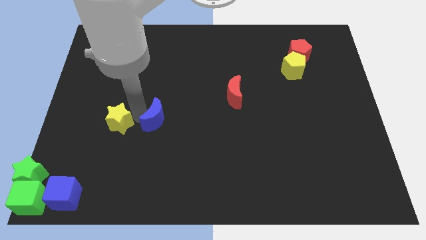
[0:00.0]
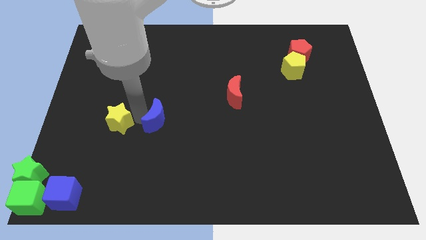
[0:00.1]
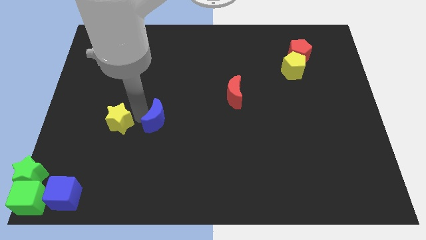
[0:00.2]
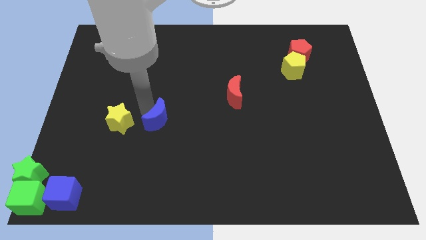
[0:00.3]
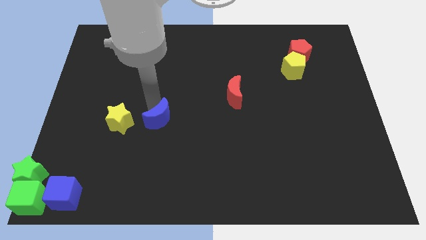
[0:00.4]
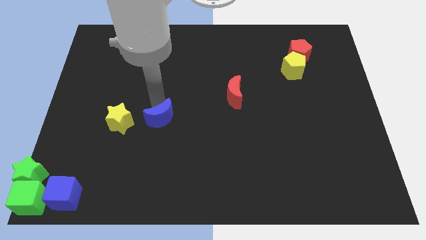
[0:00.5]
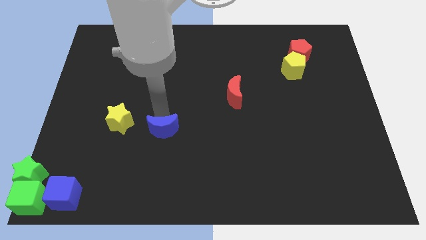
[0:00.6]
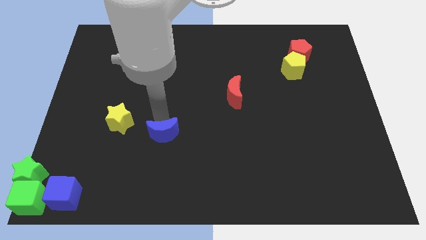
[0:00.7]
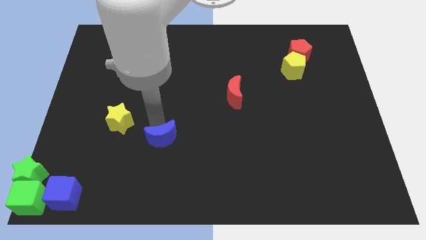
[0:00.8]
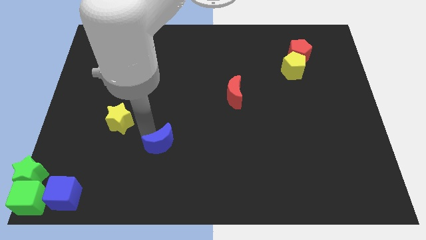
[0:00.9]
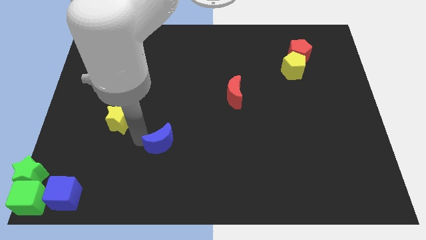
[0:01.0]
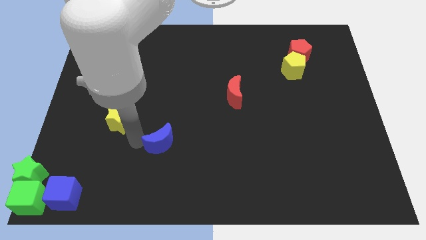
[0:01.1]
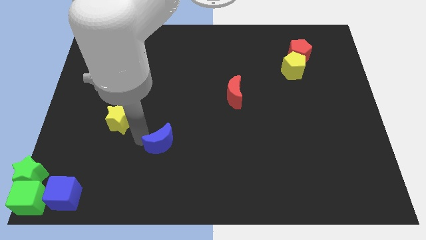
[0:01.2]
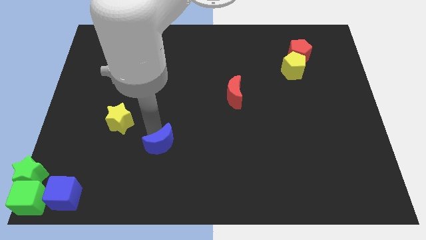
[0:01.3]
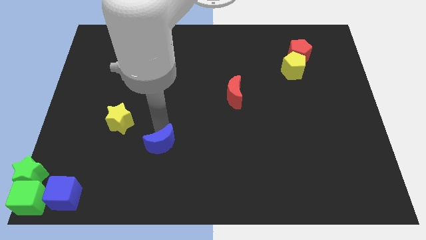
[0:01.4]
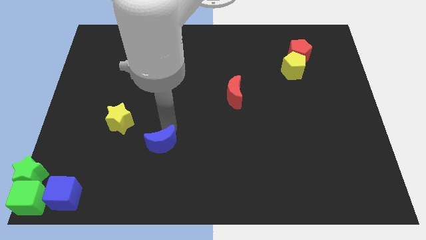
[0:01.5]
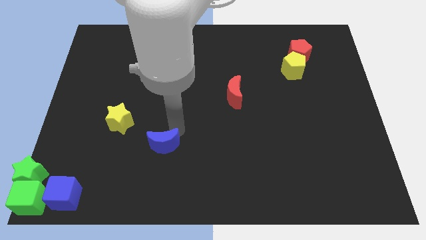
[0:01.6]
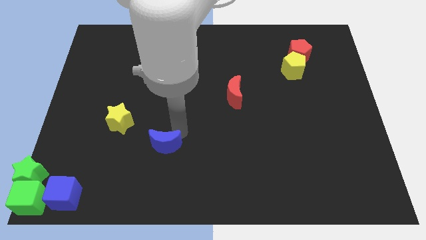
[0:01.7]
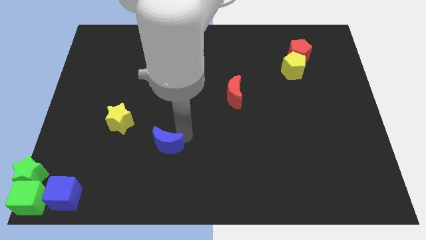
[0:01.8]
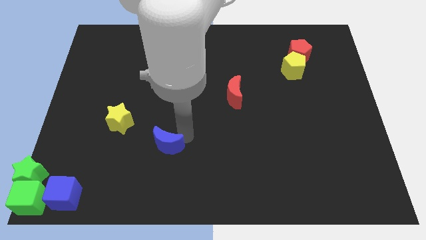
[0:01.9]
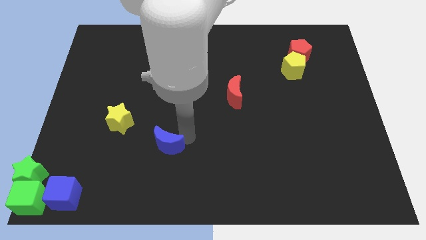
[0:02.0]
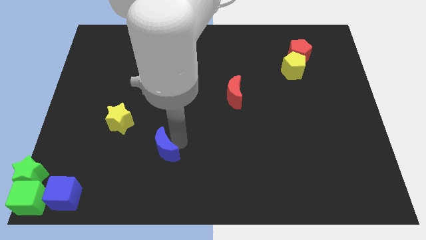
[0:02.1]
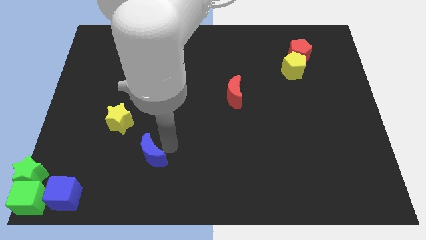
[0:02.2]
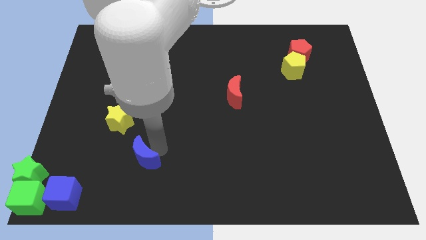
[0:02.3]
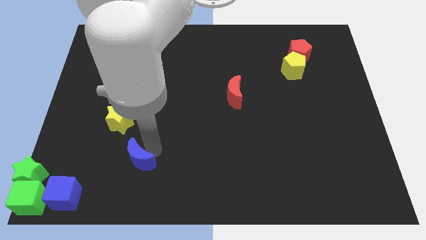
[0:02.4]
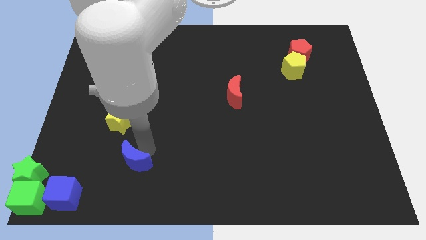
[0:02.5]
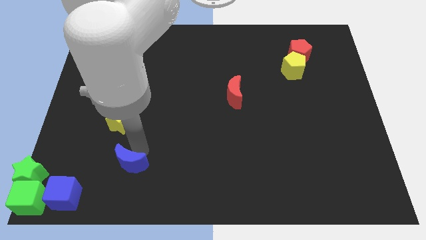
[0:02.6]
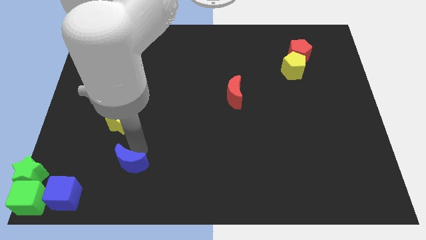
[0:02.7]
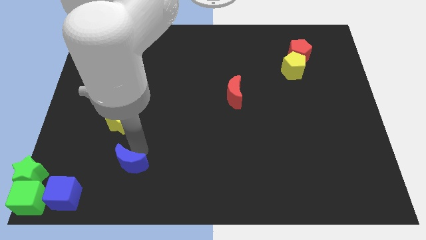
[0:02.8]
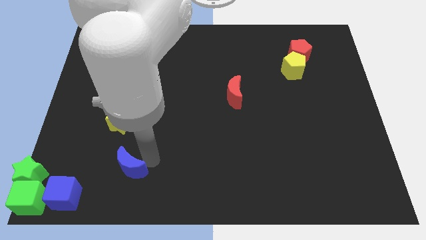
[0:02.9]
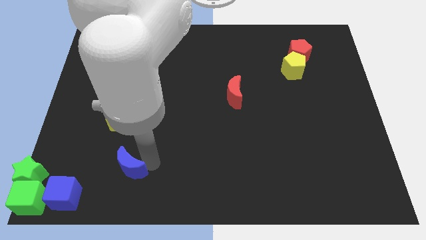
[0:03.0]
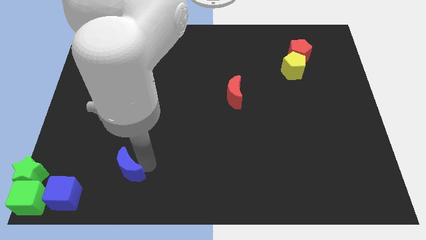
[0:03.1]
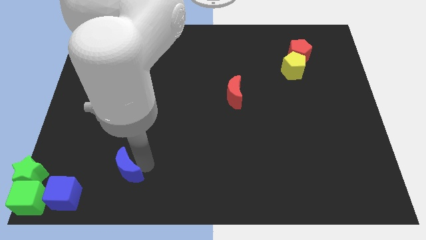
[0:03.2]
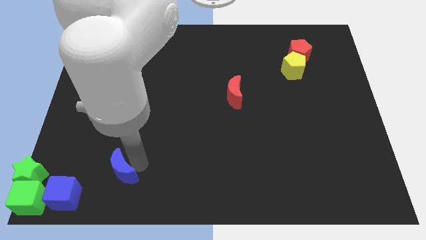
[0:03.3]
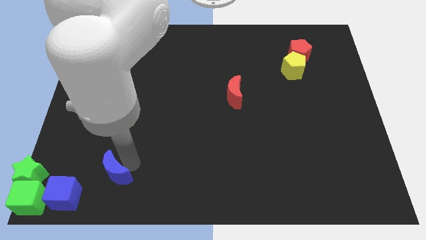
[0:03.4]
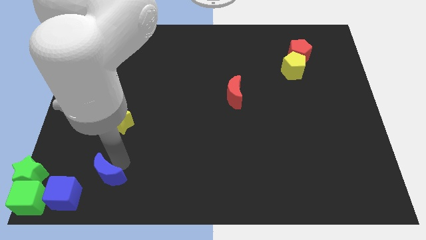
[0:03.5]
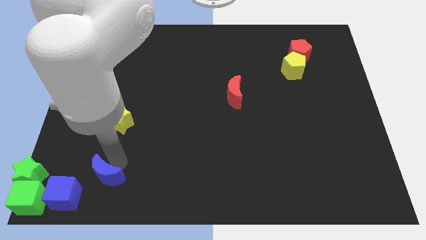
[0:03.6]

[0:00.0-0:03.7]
put blue moon vertically below yellow star

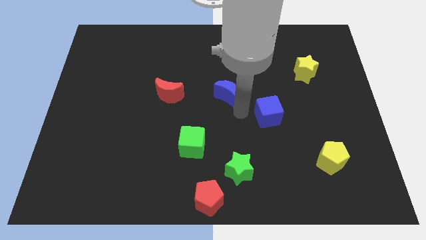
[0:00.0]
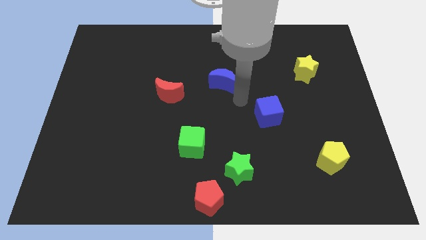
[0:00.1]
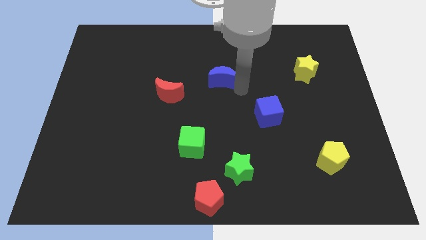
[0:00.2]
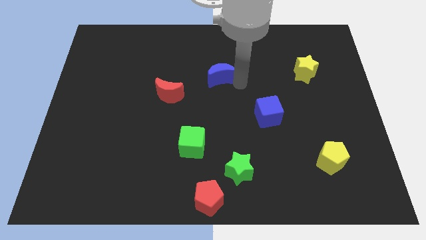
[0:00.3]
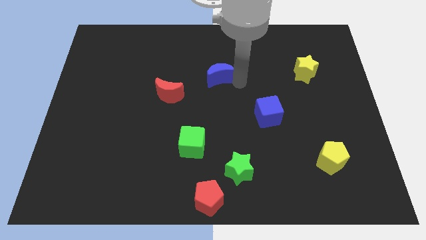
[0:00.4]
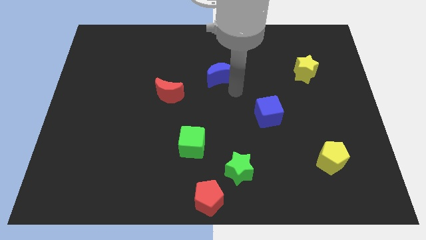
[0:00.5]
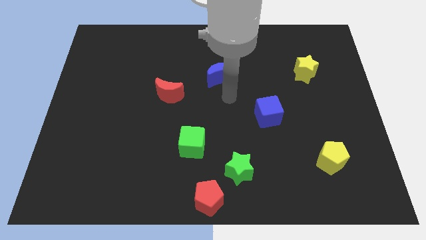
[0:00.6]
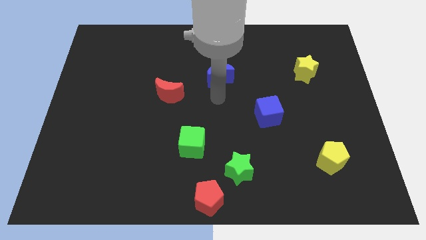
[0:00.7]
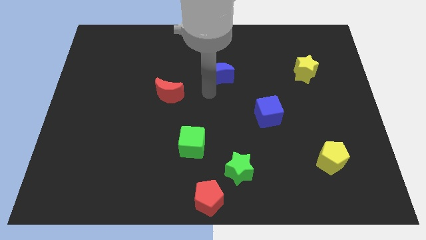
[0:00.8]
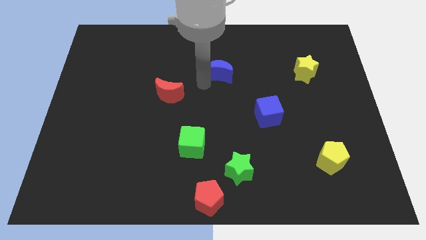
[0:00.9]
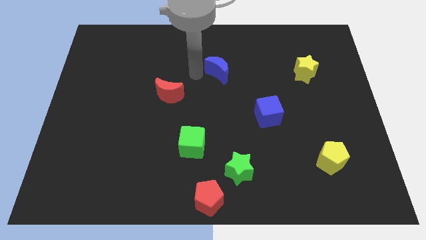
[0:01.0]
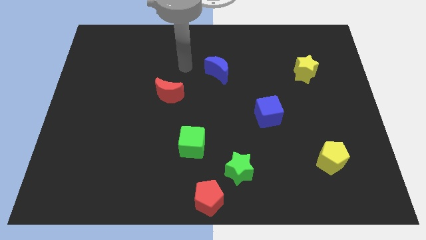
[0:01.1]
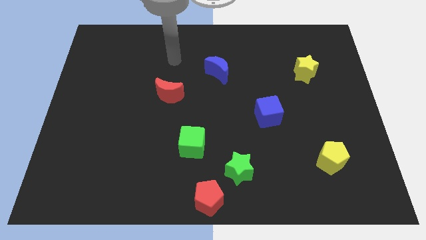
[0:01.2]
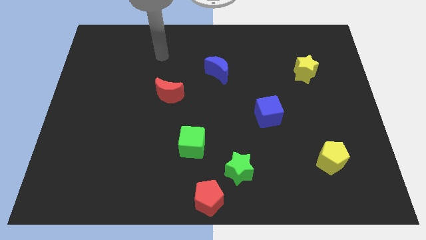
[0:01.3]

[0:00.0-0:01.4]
move the blue cube towards top center of the board

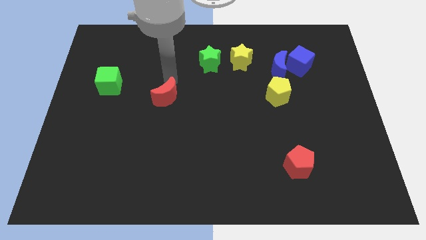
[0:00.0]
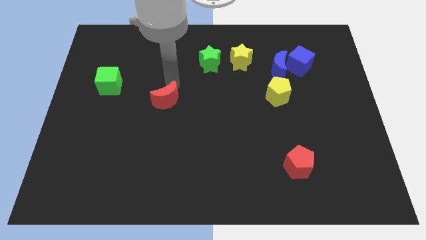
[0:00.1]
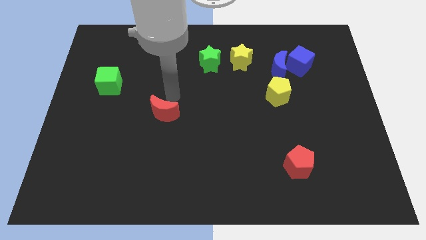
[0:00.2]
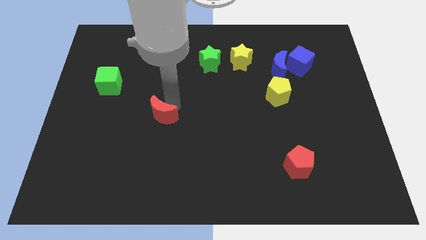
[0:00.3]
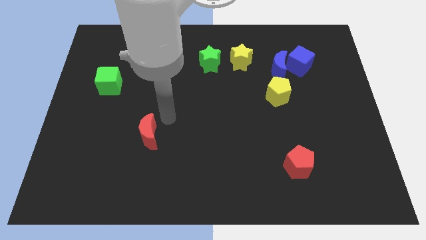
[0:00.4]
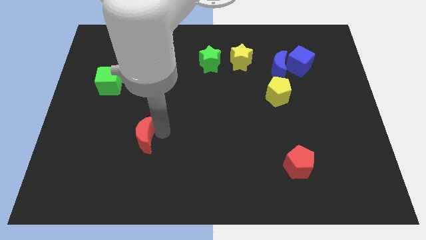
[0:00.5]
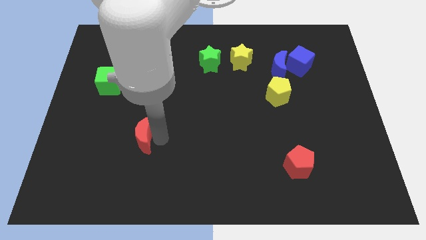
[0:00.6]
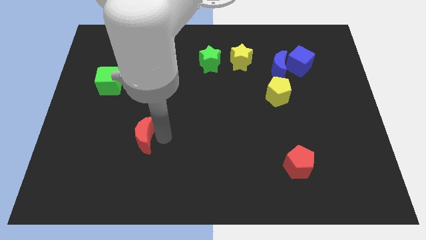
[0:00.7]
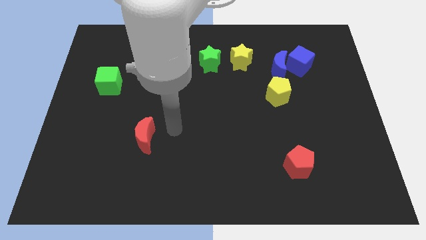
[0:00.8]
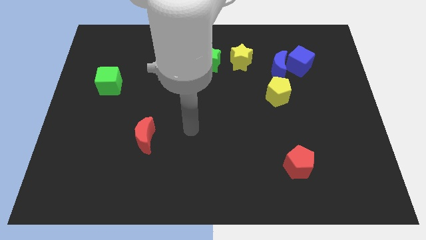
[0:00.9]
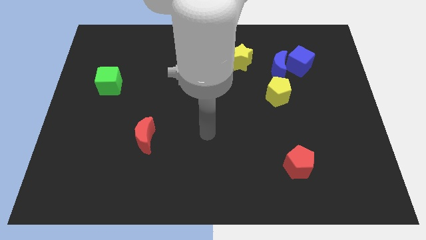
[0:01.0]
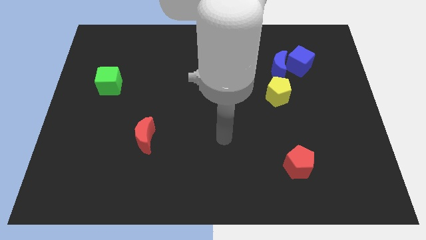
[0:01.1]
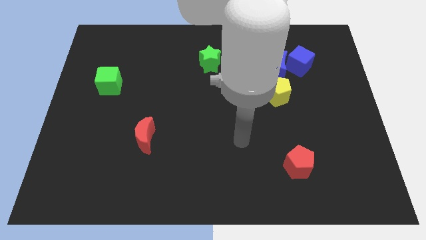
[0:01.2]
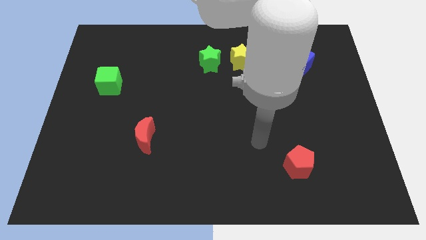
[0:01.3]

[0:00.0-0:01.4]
put the red moon diagonally to the green cube

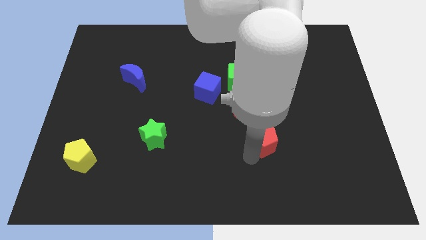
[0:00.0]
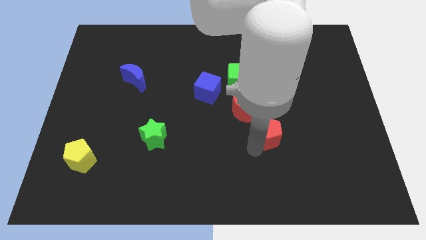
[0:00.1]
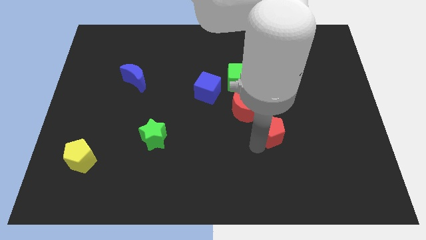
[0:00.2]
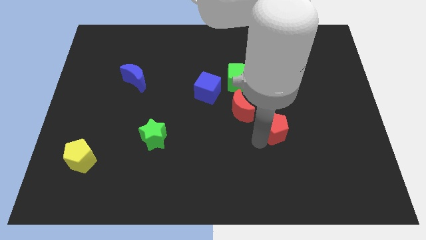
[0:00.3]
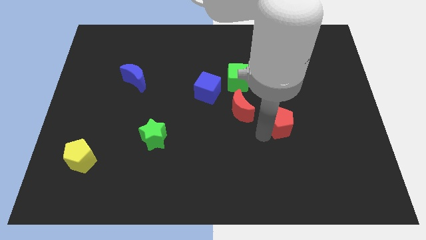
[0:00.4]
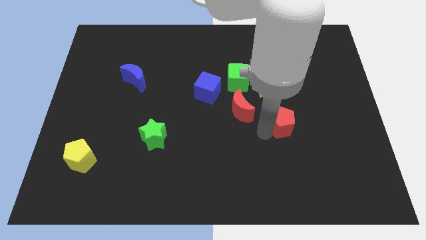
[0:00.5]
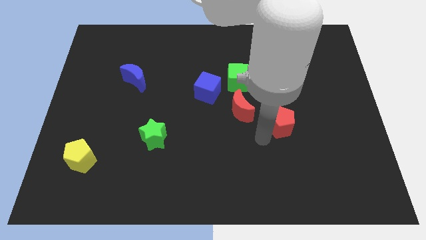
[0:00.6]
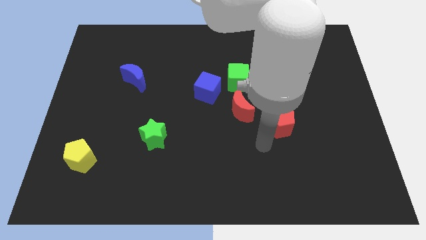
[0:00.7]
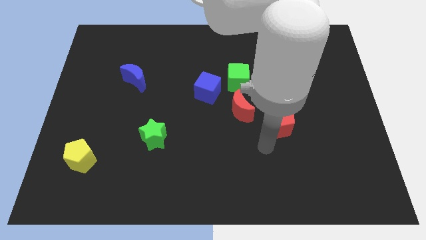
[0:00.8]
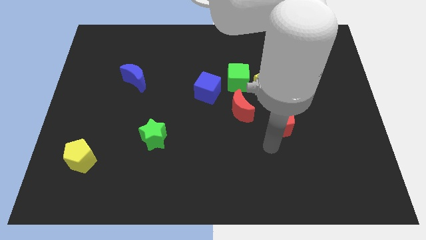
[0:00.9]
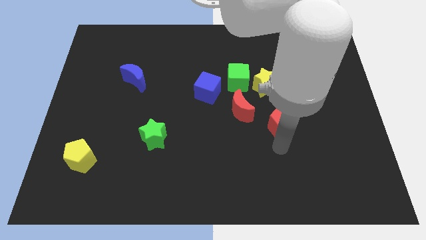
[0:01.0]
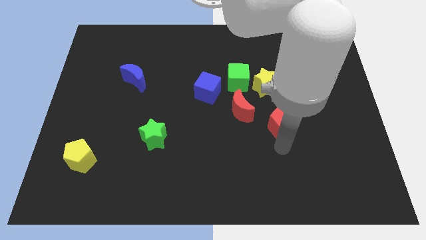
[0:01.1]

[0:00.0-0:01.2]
push the red pentagon diagonal to the red crescent

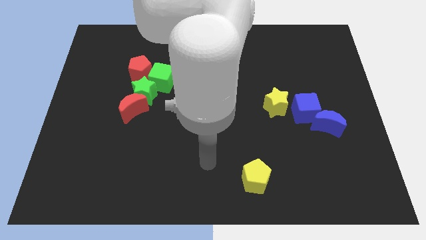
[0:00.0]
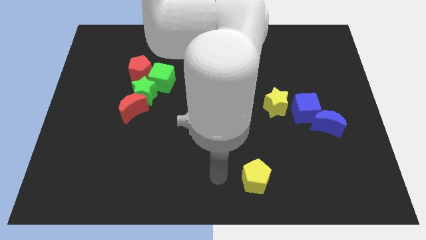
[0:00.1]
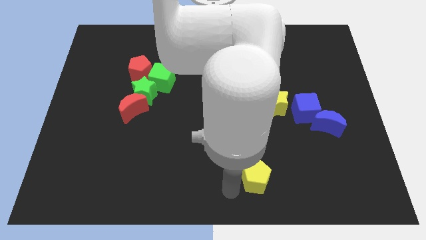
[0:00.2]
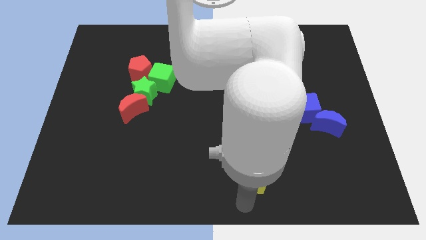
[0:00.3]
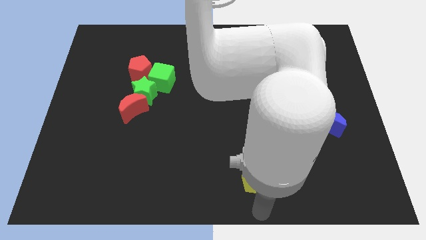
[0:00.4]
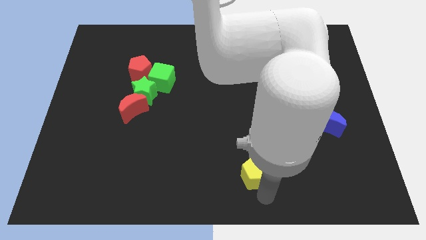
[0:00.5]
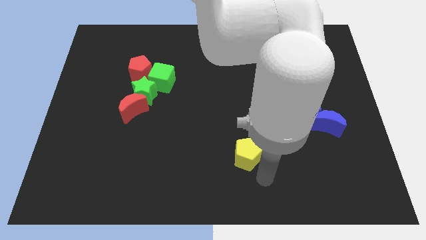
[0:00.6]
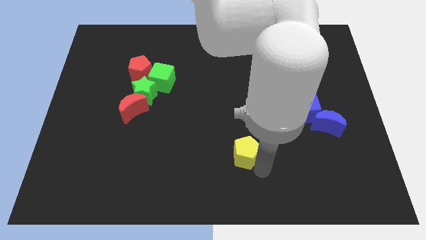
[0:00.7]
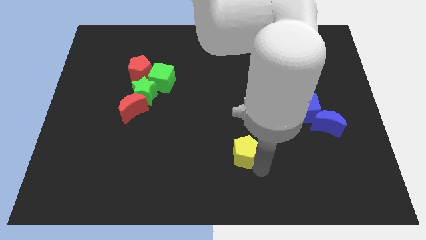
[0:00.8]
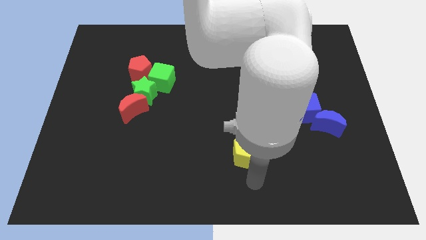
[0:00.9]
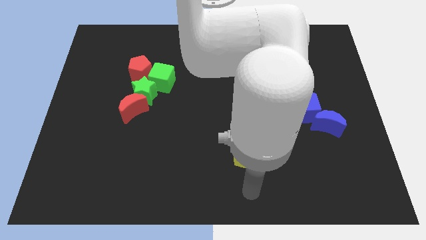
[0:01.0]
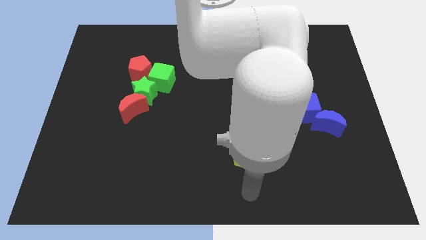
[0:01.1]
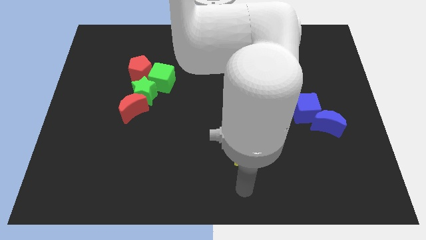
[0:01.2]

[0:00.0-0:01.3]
move the yellow pentagon towards the yellow star
